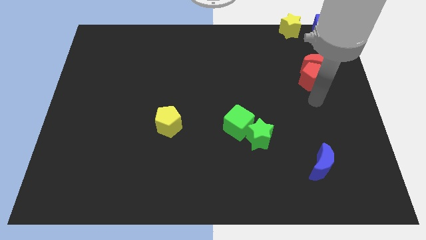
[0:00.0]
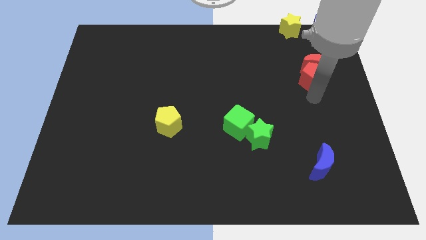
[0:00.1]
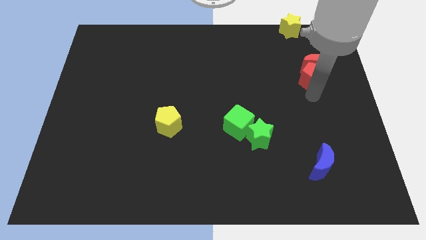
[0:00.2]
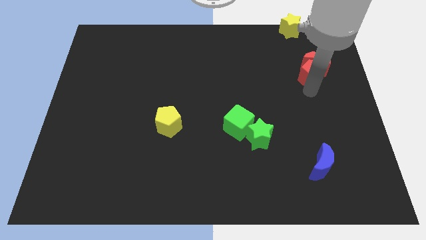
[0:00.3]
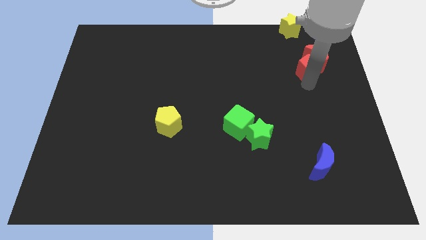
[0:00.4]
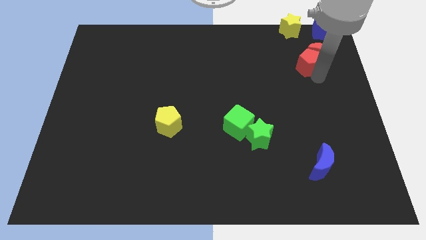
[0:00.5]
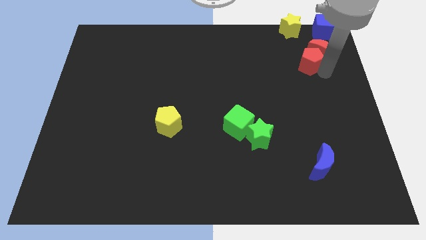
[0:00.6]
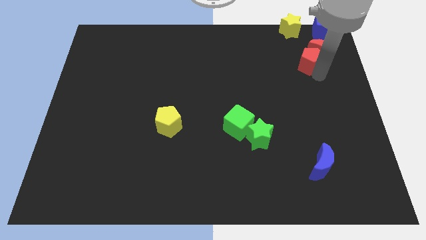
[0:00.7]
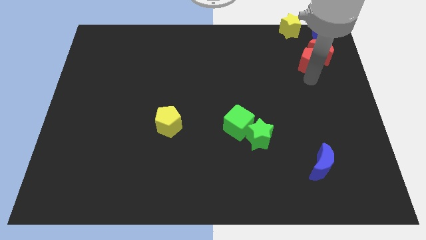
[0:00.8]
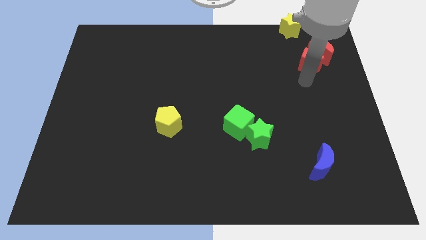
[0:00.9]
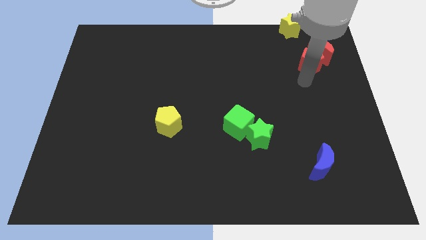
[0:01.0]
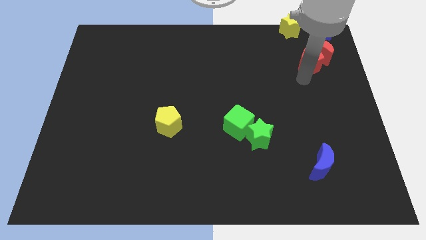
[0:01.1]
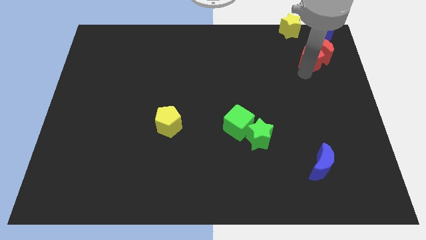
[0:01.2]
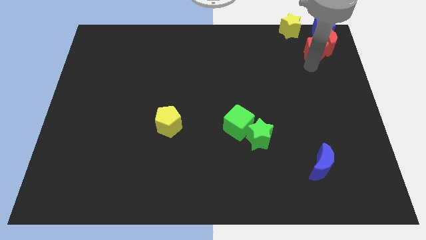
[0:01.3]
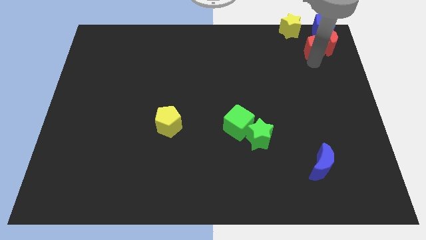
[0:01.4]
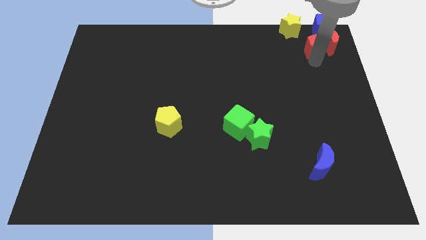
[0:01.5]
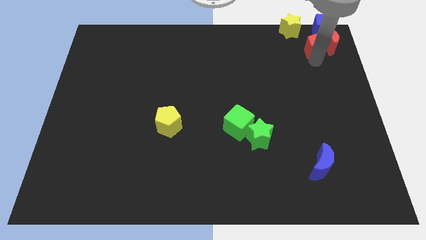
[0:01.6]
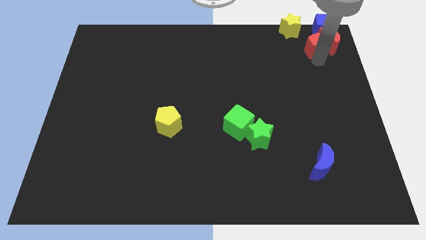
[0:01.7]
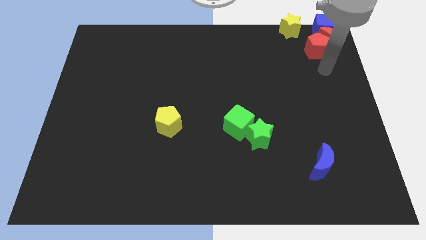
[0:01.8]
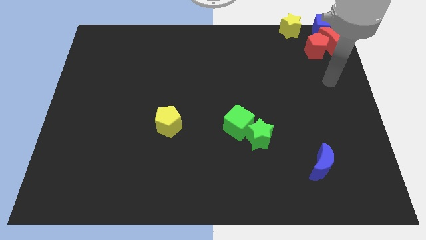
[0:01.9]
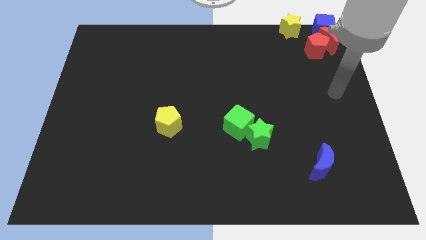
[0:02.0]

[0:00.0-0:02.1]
slide the red moon and red pentagon towards top right corner

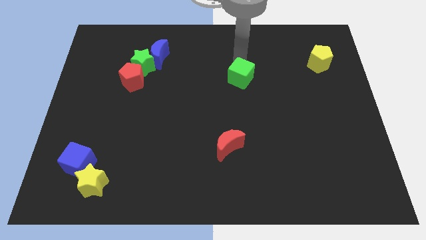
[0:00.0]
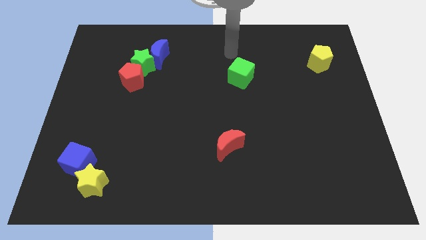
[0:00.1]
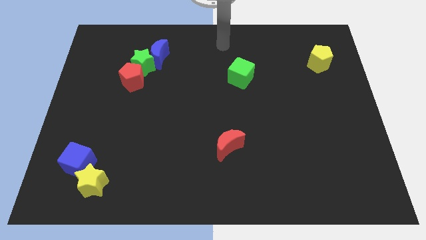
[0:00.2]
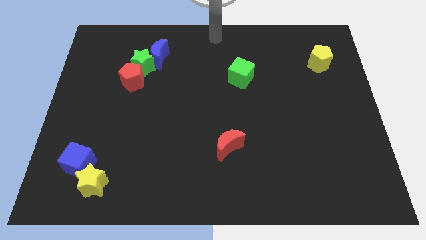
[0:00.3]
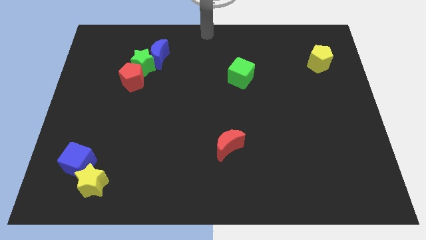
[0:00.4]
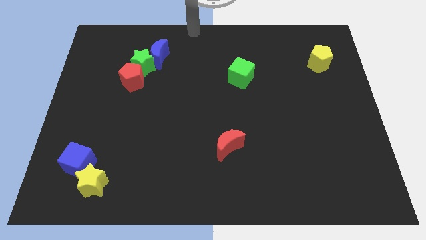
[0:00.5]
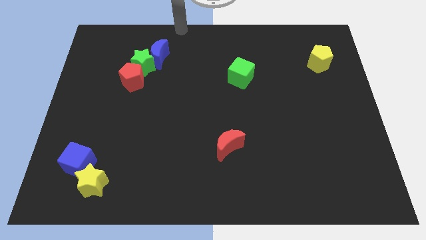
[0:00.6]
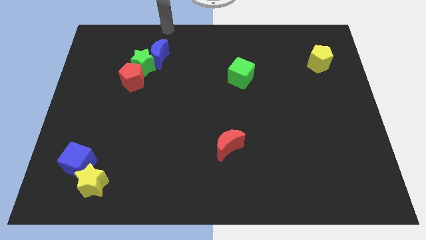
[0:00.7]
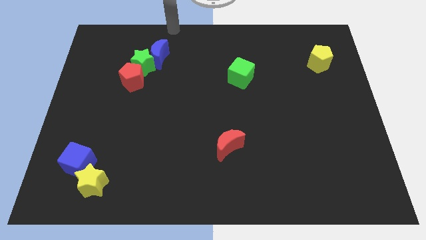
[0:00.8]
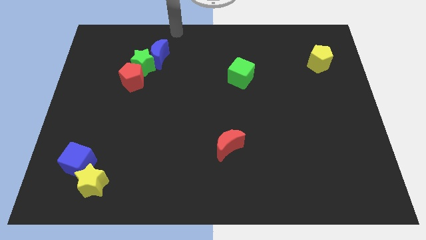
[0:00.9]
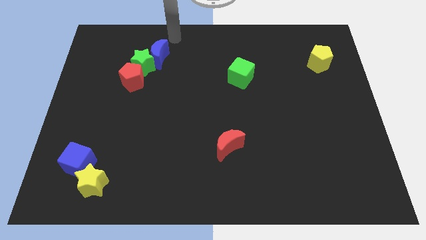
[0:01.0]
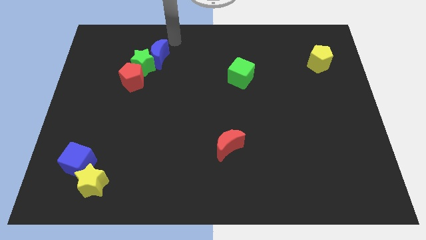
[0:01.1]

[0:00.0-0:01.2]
place your hand above blue crescent

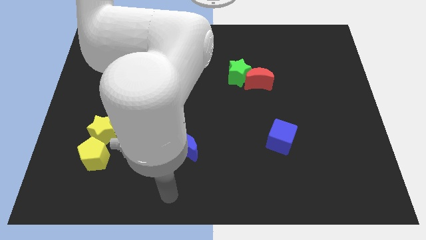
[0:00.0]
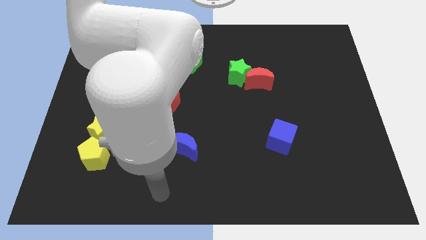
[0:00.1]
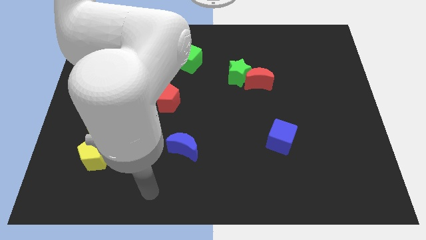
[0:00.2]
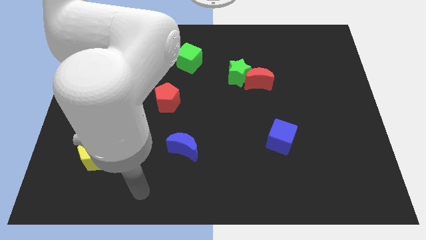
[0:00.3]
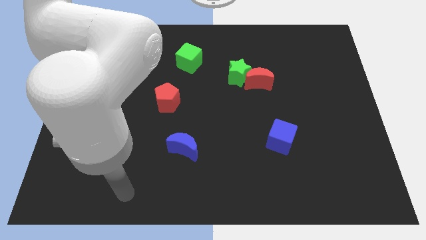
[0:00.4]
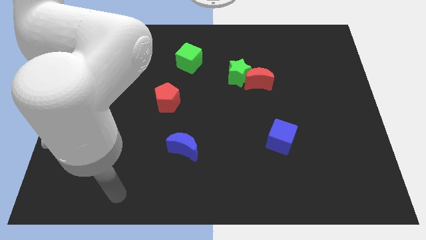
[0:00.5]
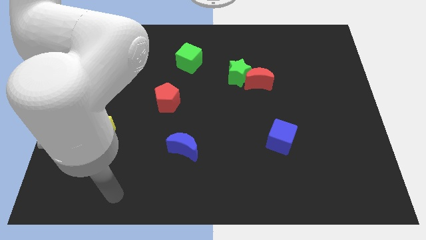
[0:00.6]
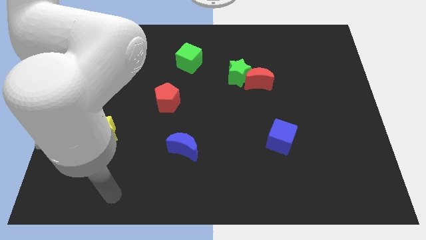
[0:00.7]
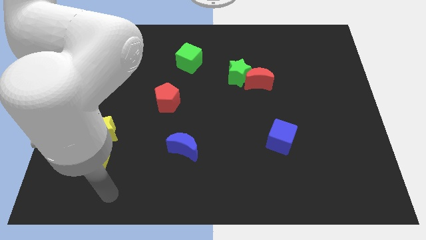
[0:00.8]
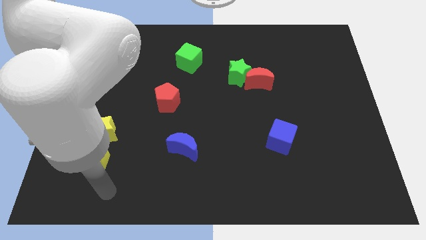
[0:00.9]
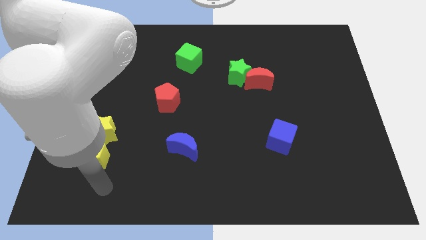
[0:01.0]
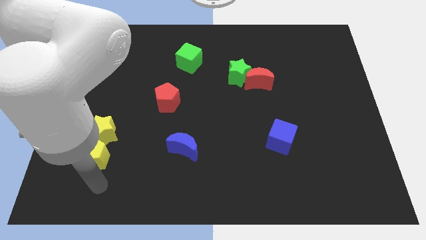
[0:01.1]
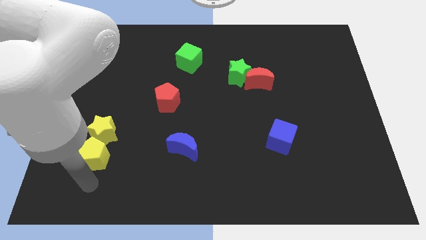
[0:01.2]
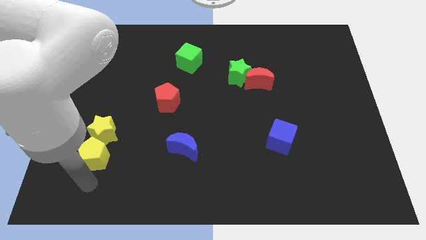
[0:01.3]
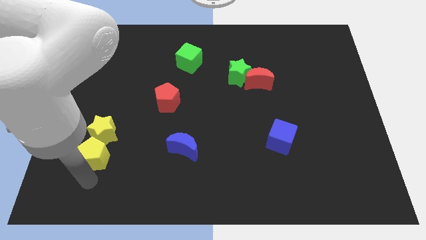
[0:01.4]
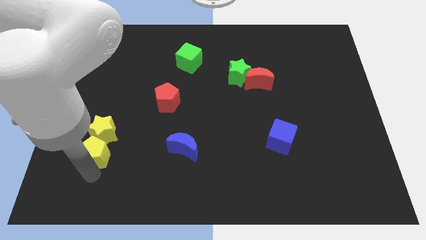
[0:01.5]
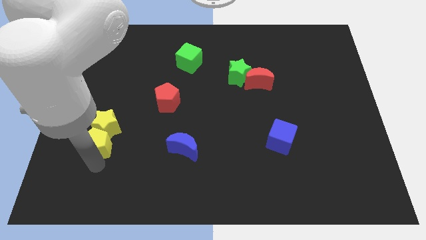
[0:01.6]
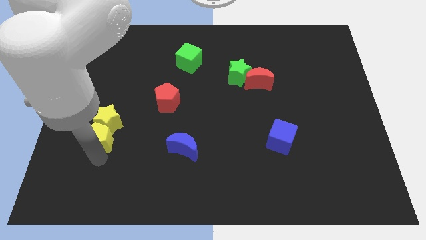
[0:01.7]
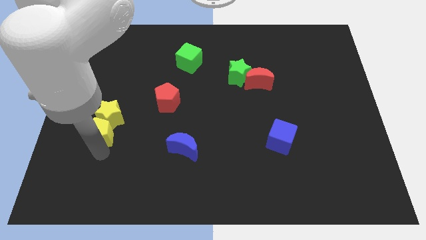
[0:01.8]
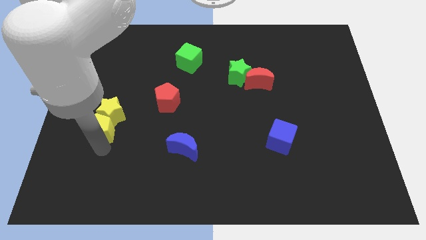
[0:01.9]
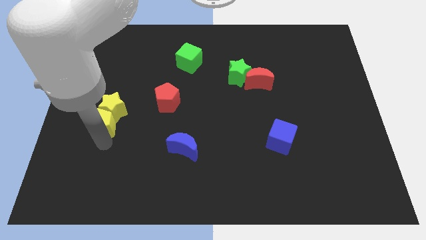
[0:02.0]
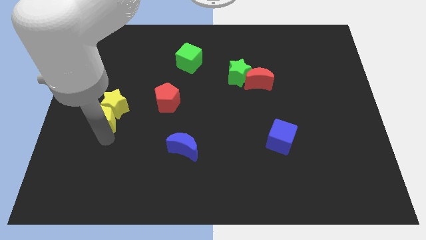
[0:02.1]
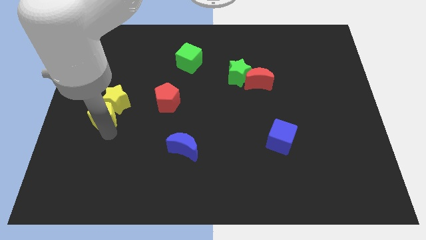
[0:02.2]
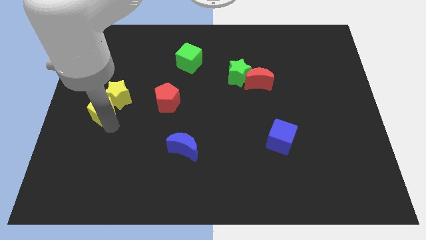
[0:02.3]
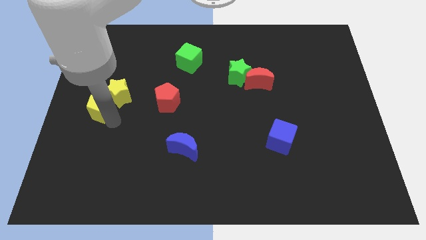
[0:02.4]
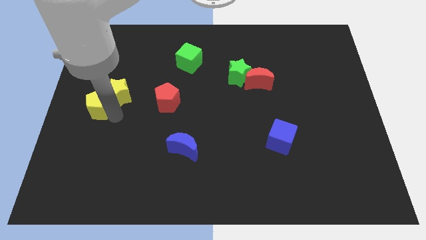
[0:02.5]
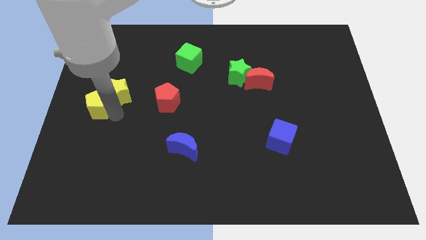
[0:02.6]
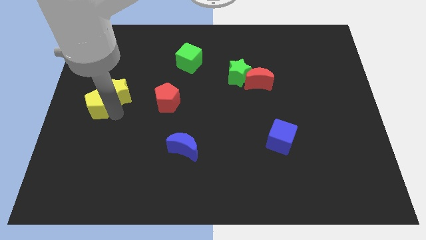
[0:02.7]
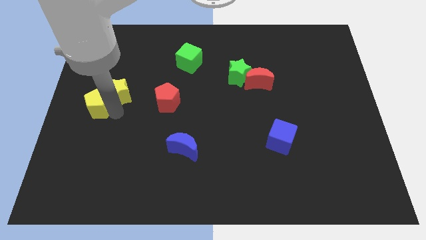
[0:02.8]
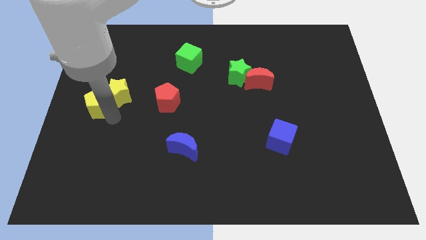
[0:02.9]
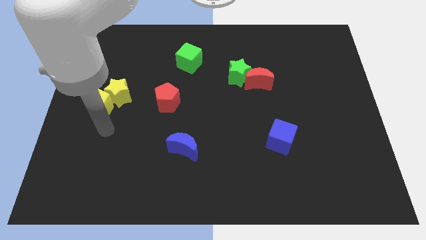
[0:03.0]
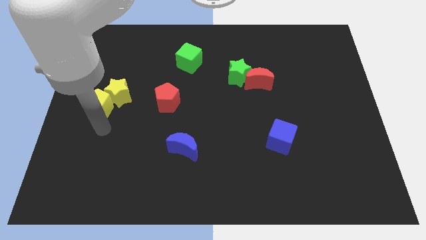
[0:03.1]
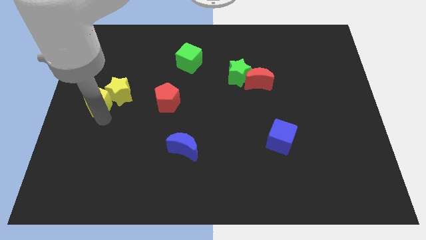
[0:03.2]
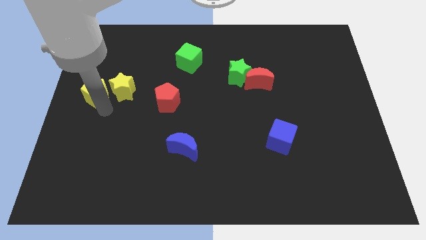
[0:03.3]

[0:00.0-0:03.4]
push the yellow blocks to the left of the red pentagon

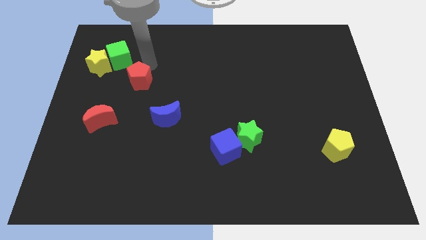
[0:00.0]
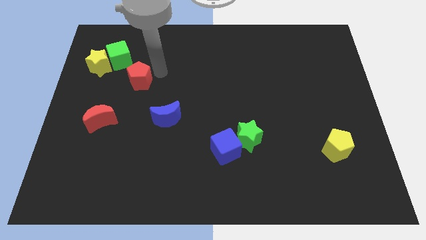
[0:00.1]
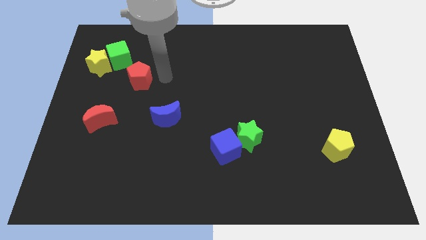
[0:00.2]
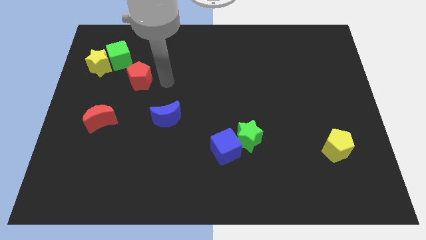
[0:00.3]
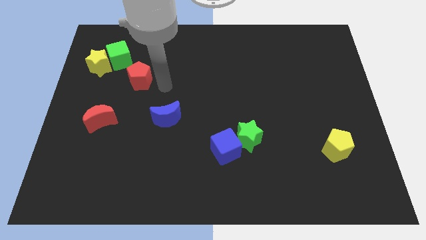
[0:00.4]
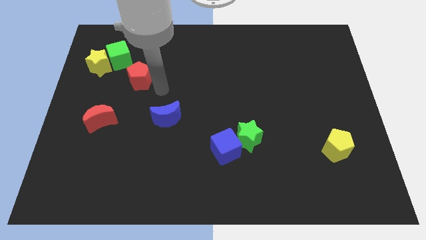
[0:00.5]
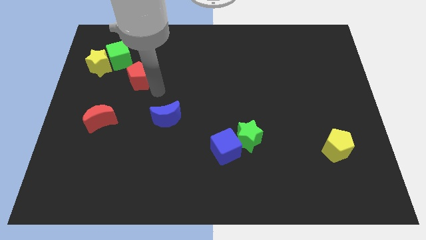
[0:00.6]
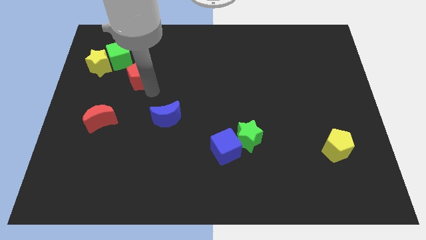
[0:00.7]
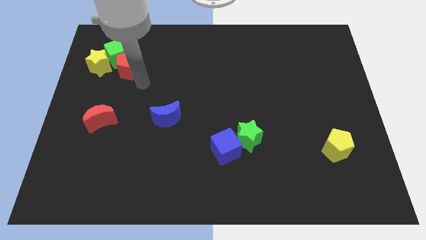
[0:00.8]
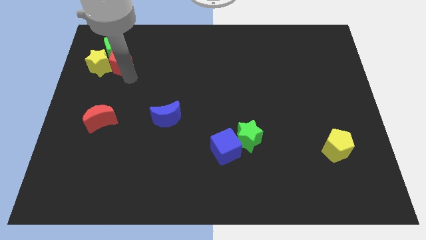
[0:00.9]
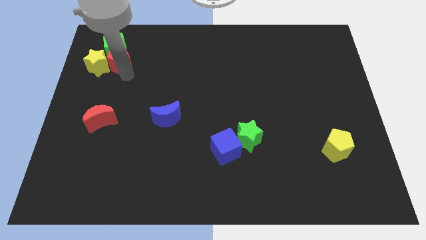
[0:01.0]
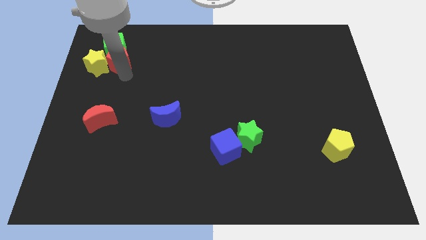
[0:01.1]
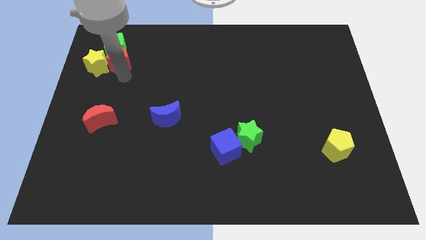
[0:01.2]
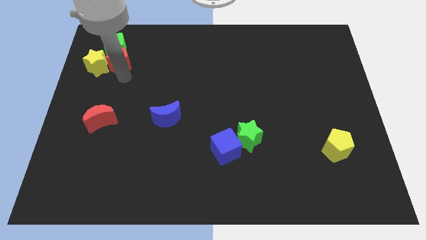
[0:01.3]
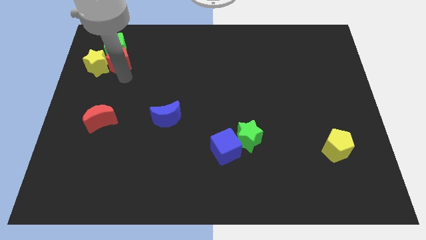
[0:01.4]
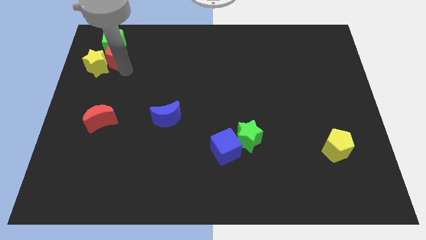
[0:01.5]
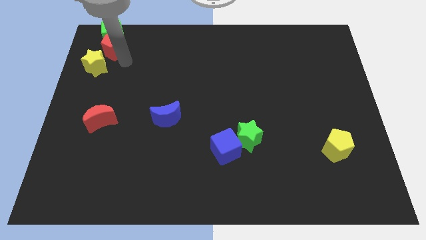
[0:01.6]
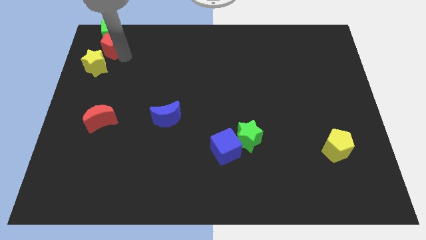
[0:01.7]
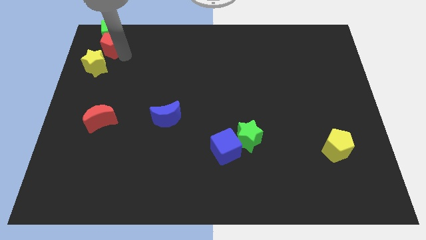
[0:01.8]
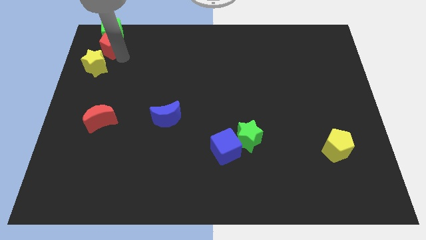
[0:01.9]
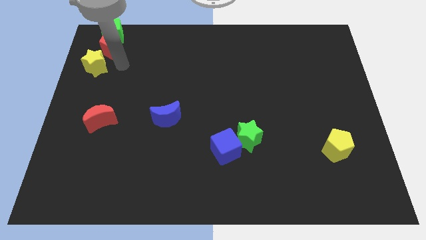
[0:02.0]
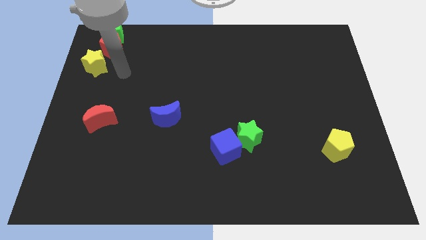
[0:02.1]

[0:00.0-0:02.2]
push the red pentagon into the green cube
